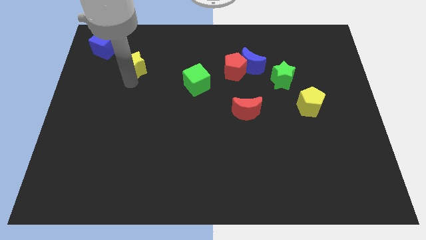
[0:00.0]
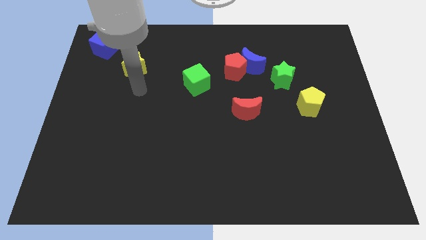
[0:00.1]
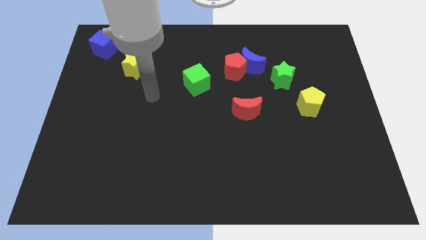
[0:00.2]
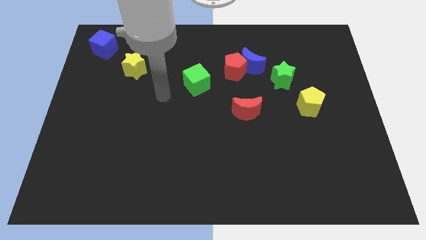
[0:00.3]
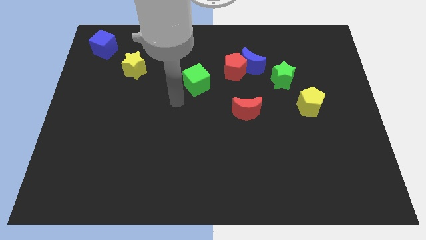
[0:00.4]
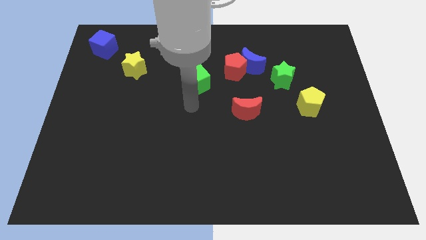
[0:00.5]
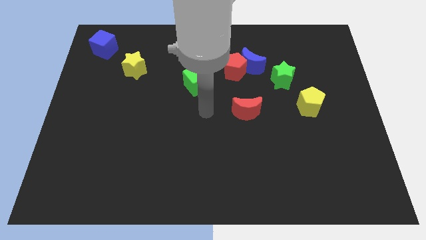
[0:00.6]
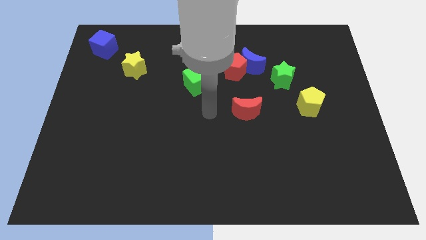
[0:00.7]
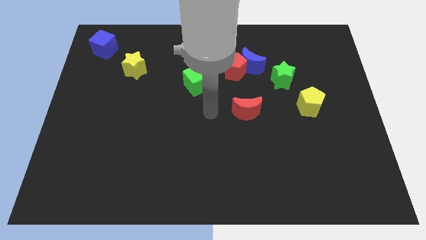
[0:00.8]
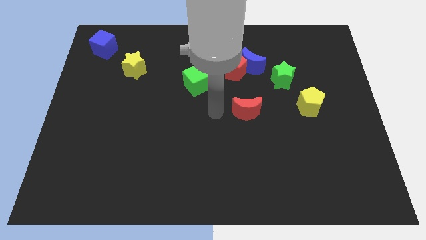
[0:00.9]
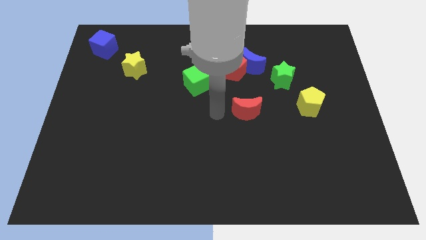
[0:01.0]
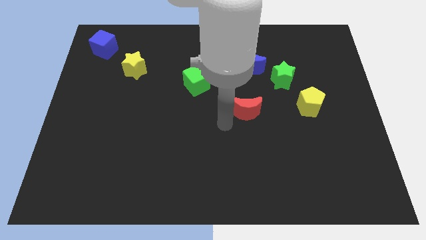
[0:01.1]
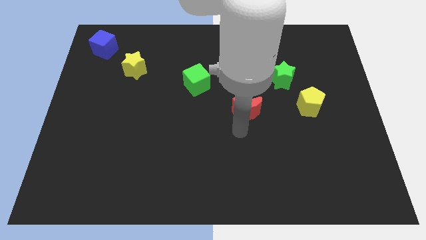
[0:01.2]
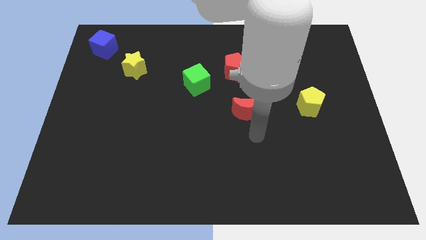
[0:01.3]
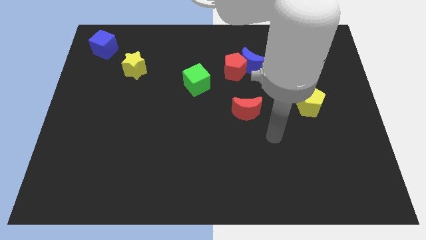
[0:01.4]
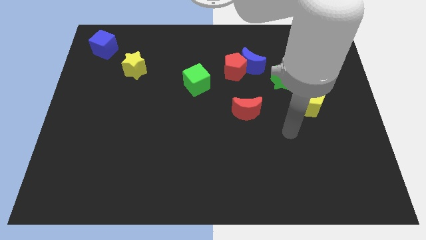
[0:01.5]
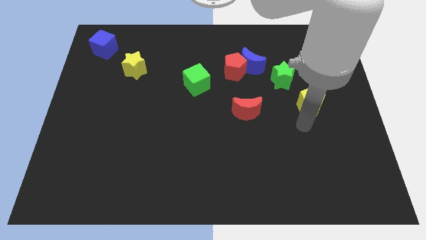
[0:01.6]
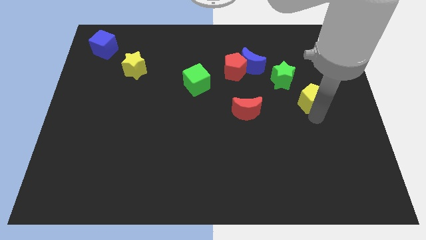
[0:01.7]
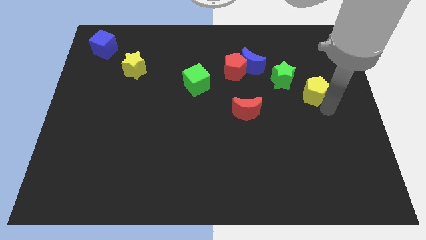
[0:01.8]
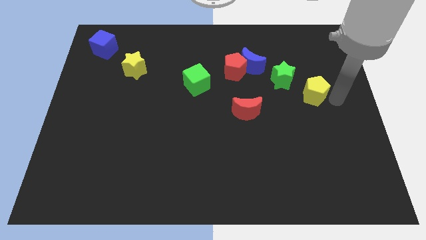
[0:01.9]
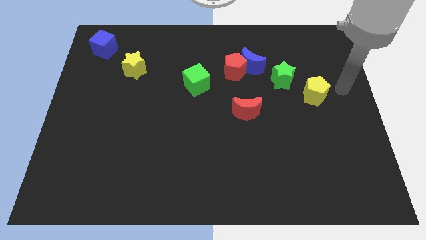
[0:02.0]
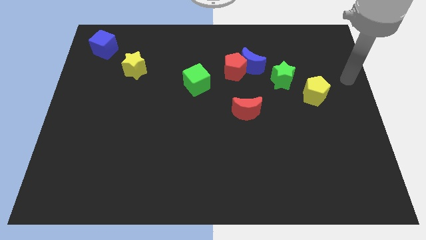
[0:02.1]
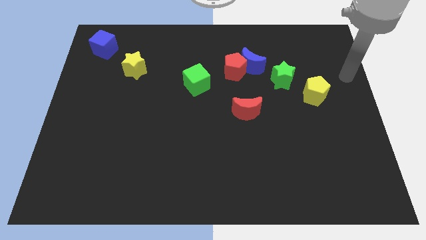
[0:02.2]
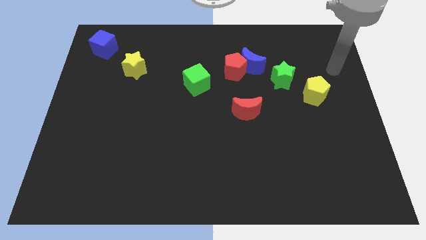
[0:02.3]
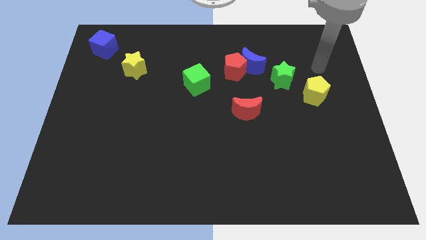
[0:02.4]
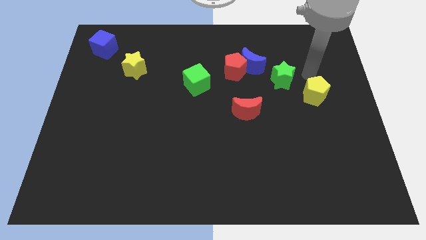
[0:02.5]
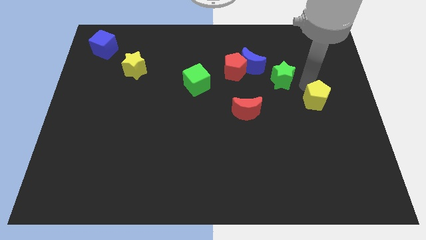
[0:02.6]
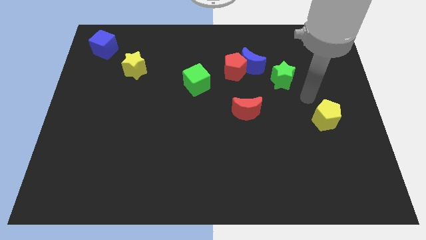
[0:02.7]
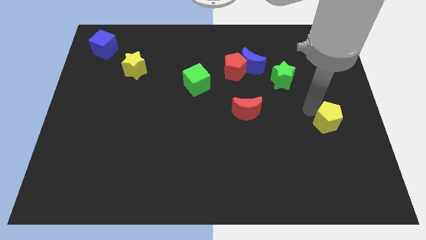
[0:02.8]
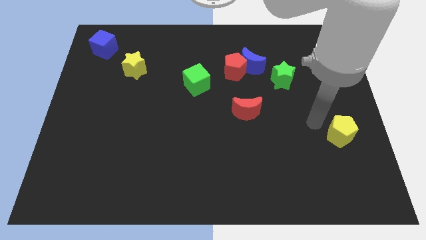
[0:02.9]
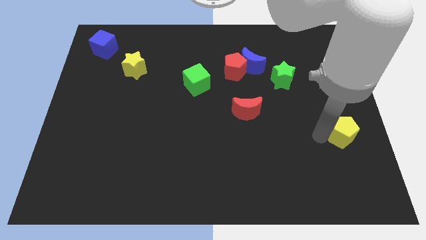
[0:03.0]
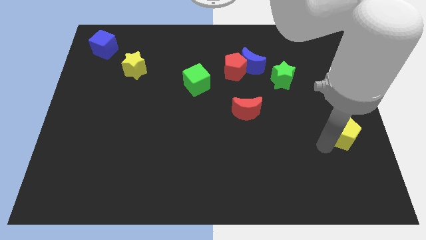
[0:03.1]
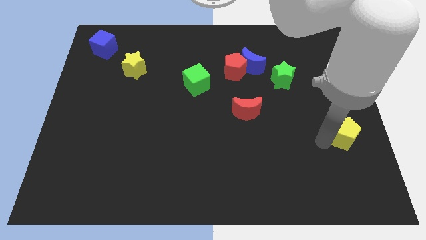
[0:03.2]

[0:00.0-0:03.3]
move the yellow pentagon away from the right side of the green star

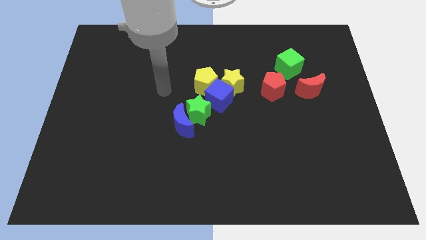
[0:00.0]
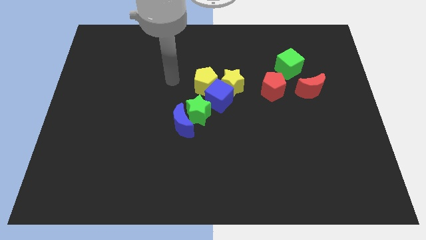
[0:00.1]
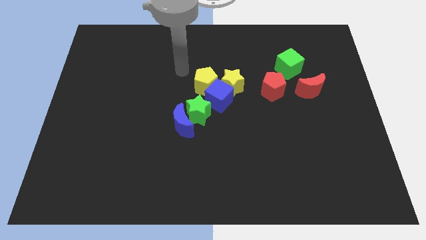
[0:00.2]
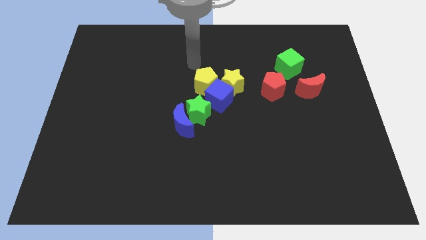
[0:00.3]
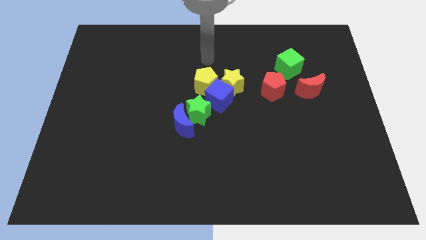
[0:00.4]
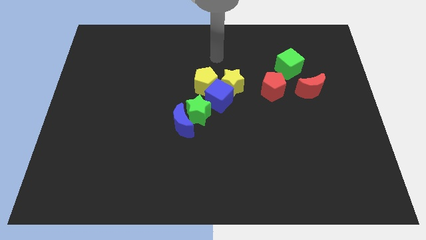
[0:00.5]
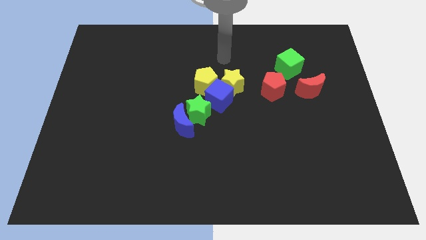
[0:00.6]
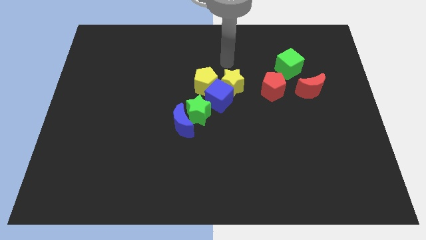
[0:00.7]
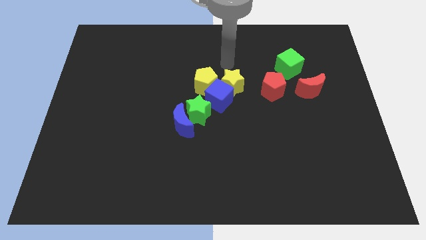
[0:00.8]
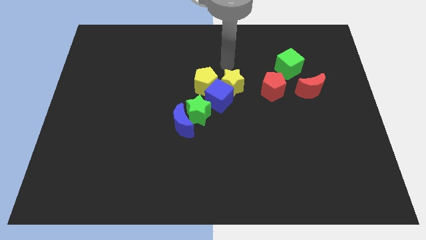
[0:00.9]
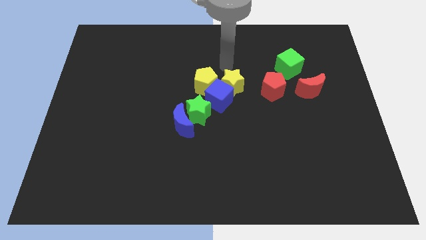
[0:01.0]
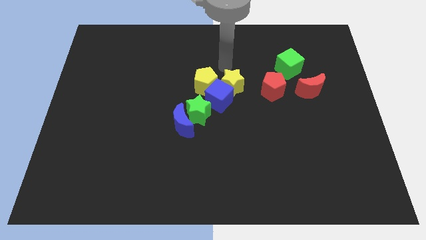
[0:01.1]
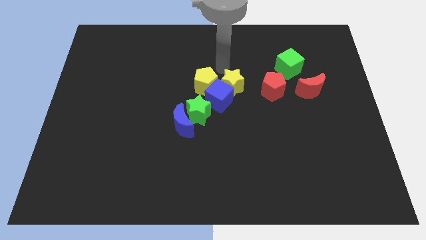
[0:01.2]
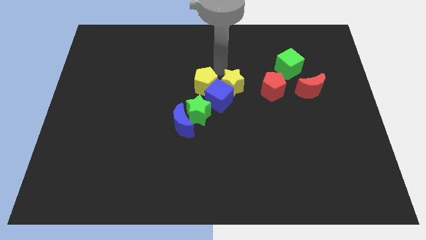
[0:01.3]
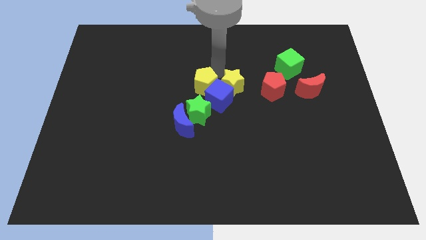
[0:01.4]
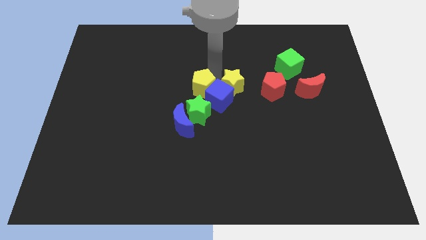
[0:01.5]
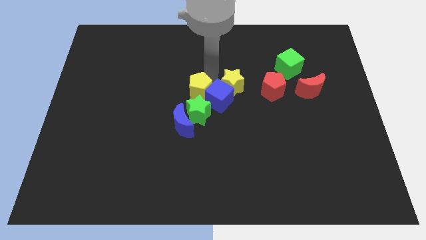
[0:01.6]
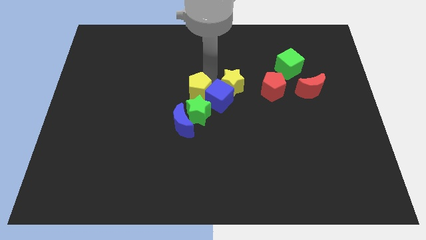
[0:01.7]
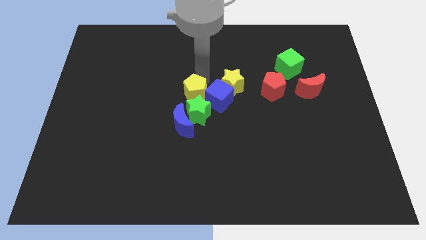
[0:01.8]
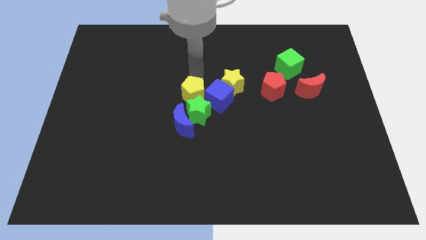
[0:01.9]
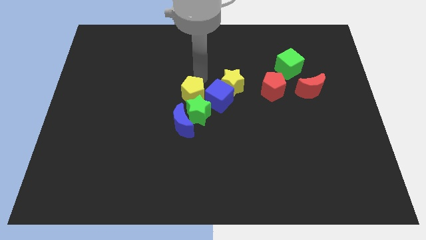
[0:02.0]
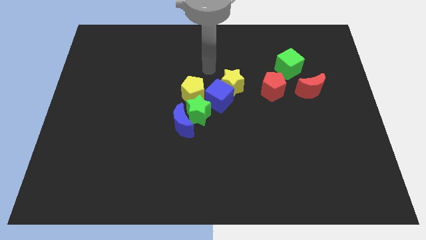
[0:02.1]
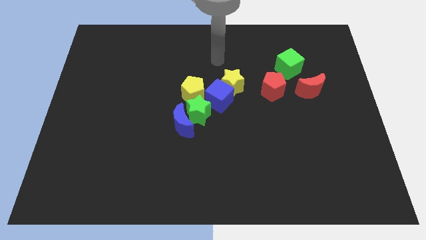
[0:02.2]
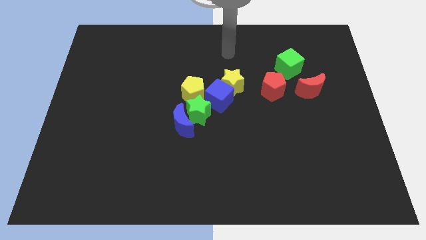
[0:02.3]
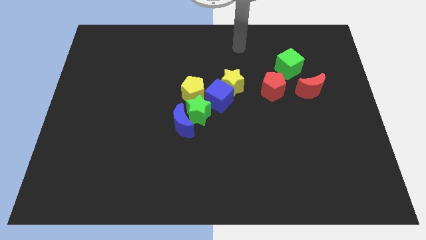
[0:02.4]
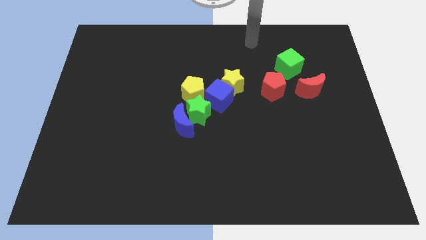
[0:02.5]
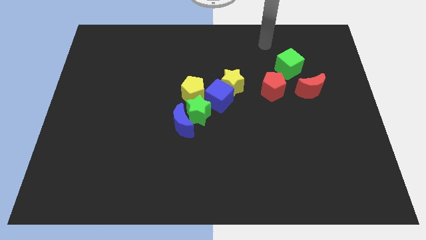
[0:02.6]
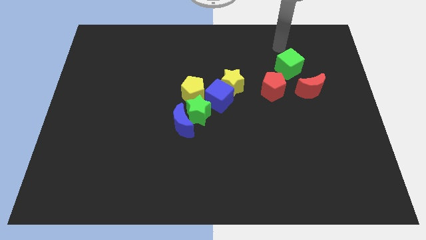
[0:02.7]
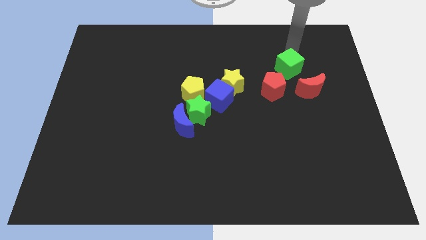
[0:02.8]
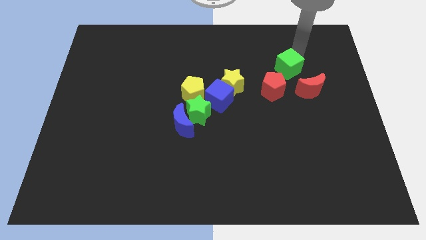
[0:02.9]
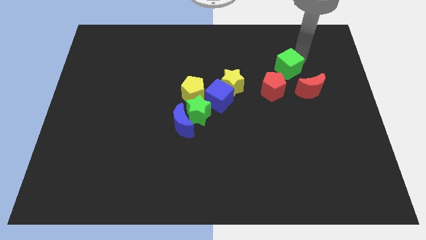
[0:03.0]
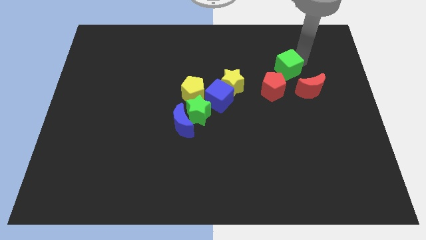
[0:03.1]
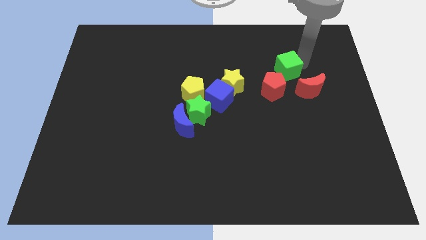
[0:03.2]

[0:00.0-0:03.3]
slightly push the yellow pentagon

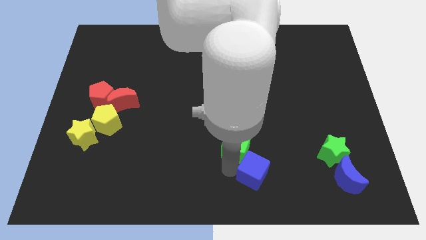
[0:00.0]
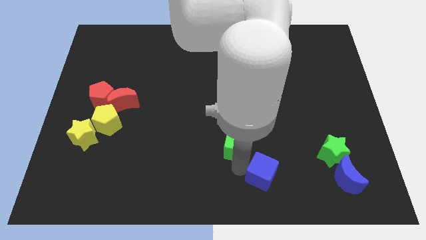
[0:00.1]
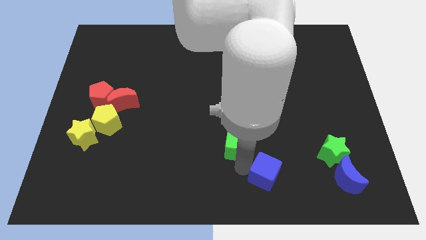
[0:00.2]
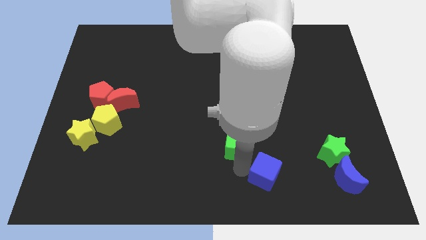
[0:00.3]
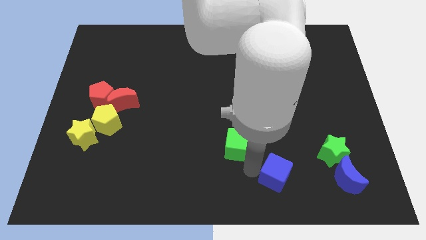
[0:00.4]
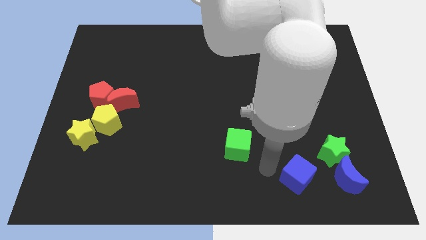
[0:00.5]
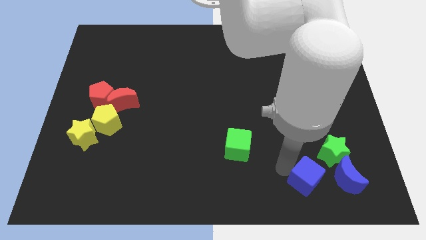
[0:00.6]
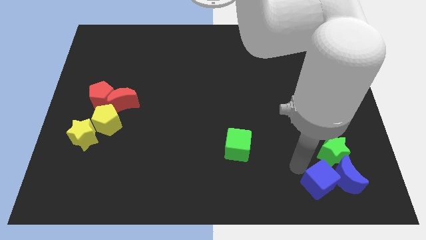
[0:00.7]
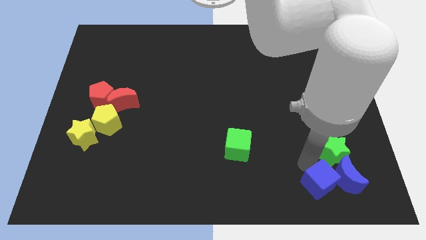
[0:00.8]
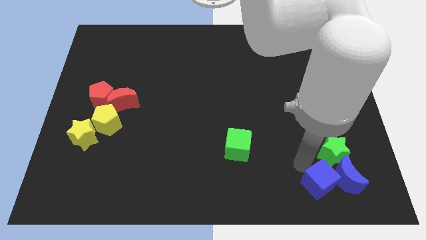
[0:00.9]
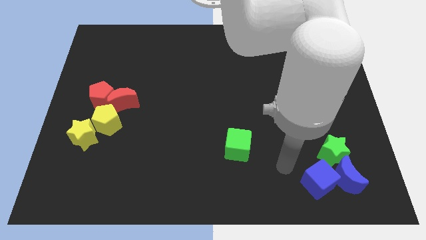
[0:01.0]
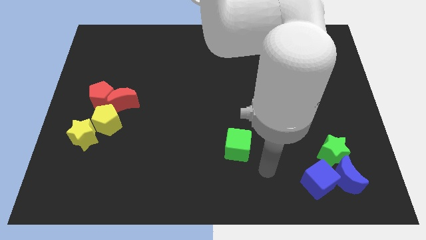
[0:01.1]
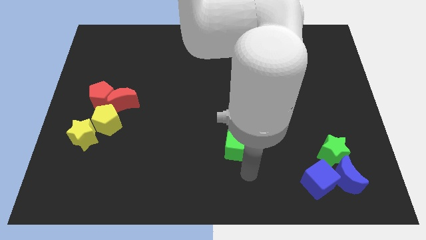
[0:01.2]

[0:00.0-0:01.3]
place the blue cube left to the blue moon

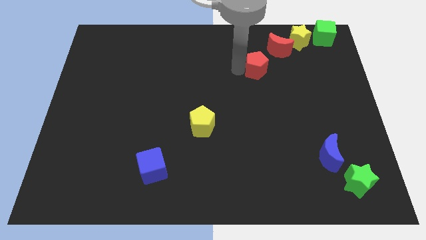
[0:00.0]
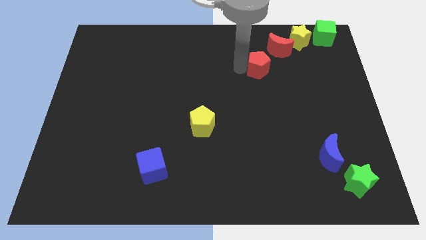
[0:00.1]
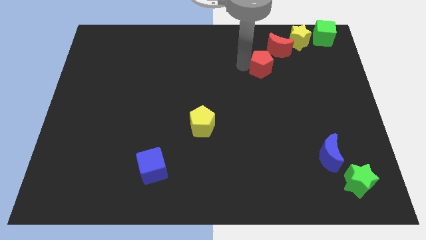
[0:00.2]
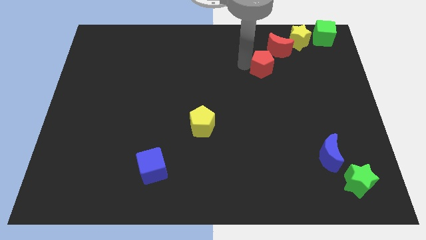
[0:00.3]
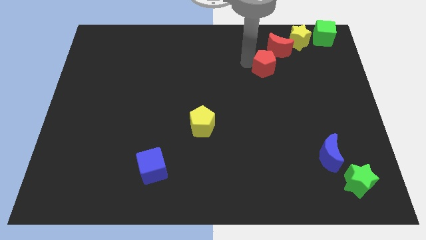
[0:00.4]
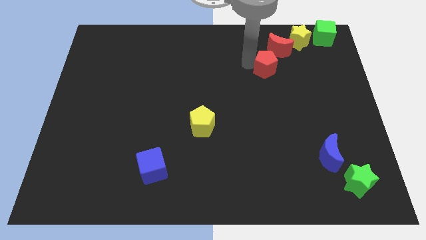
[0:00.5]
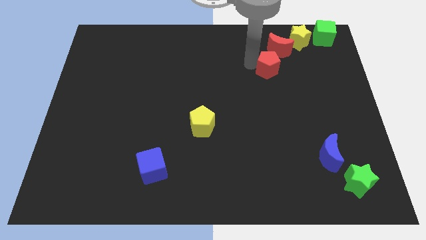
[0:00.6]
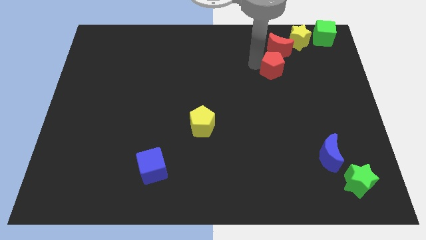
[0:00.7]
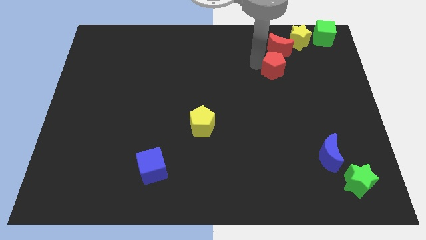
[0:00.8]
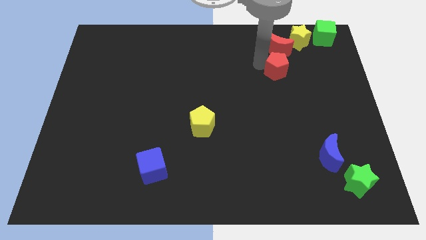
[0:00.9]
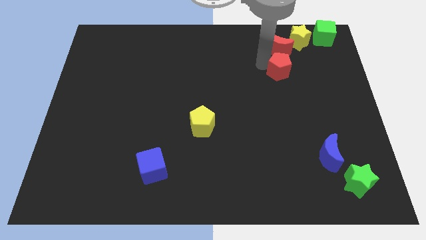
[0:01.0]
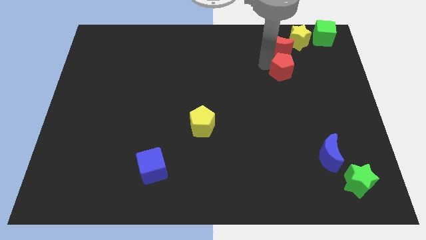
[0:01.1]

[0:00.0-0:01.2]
push the red pentagon below the red crescent
